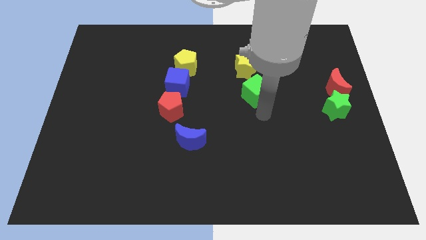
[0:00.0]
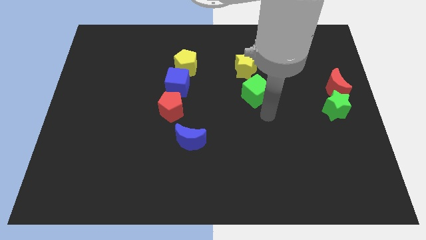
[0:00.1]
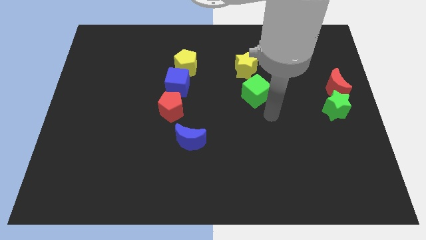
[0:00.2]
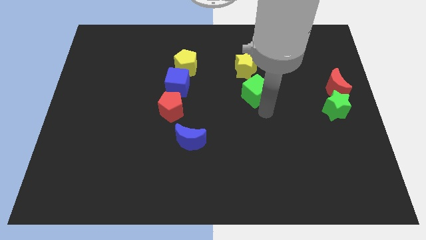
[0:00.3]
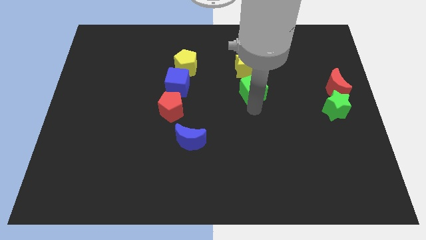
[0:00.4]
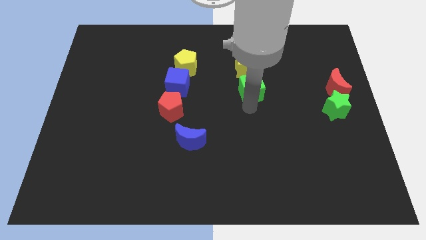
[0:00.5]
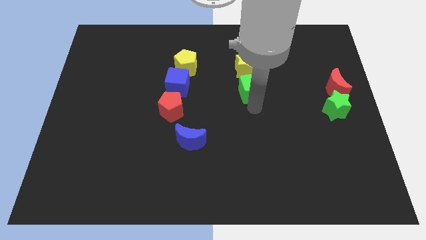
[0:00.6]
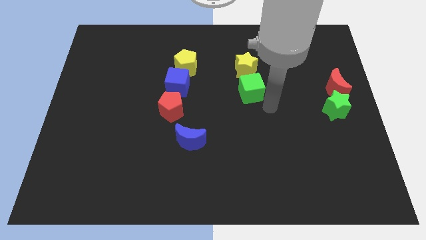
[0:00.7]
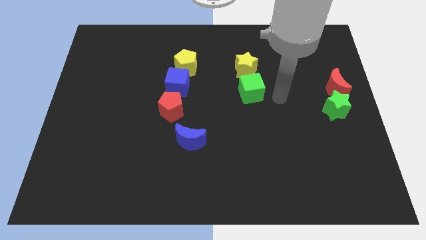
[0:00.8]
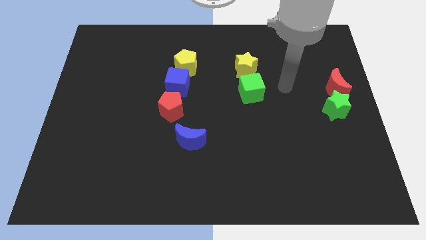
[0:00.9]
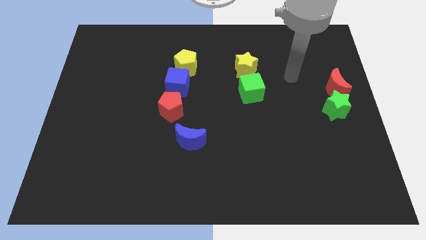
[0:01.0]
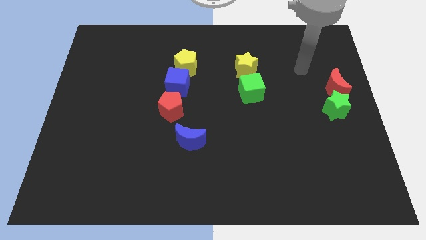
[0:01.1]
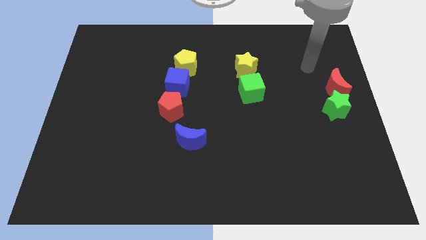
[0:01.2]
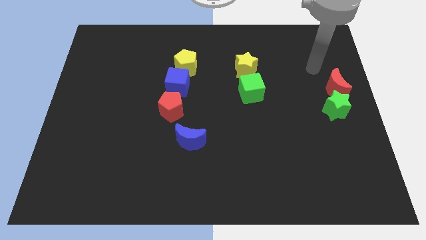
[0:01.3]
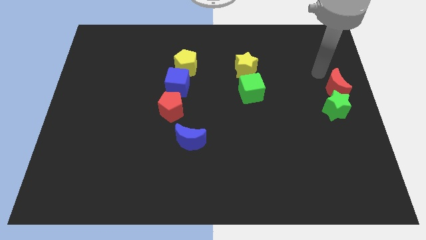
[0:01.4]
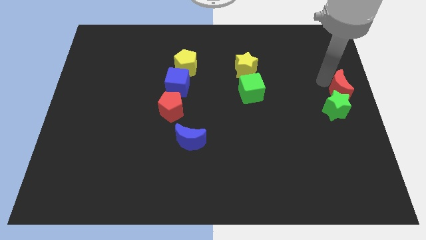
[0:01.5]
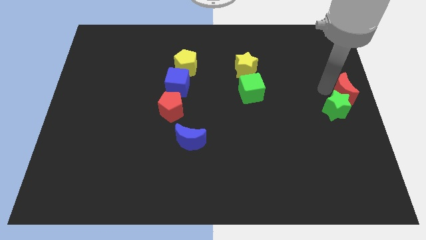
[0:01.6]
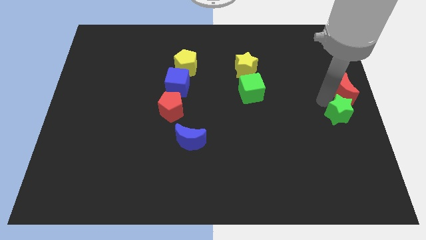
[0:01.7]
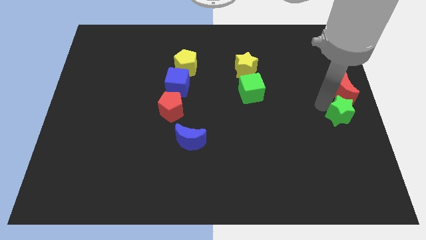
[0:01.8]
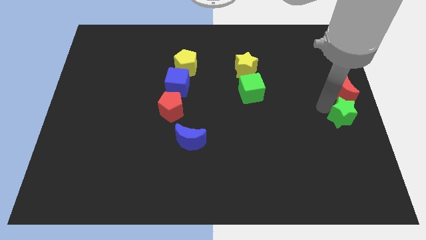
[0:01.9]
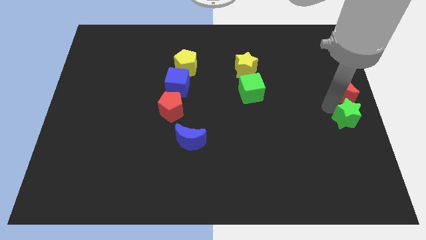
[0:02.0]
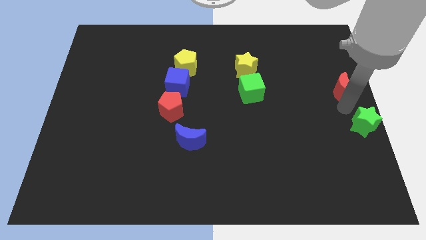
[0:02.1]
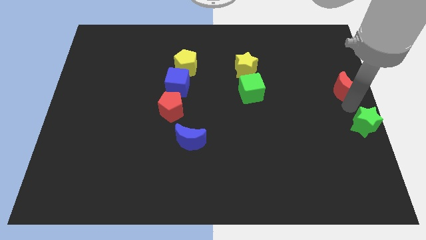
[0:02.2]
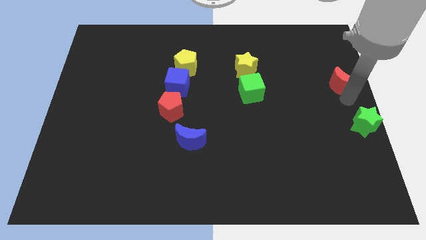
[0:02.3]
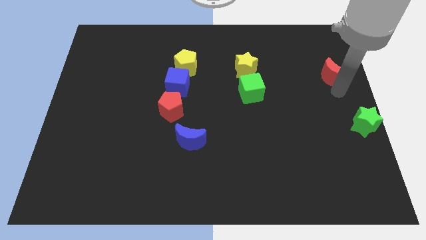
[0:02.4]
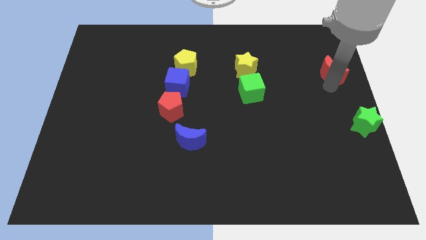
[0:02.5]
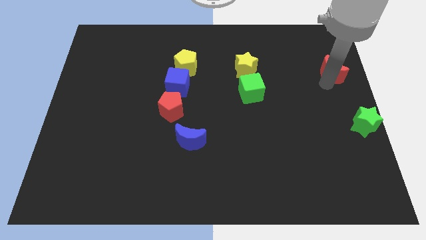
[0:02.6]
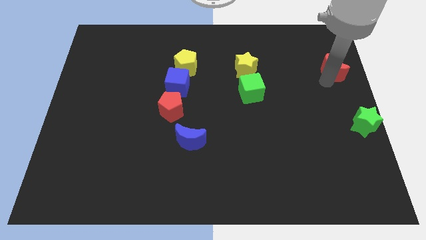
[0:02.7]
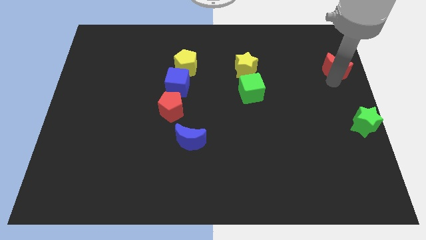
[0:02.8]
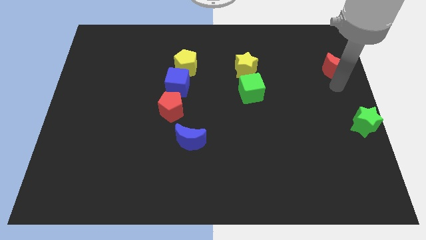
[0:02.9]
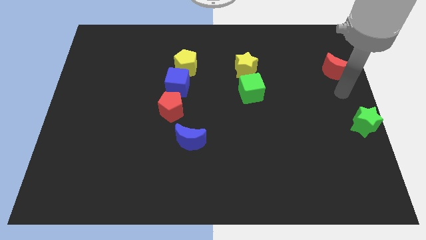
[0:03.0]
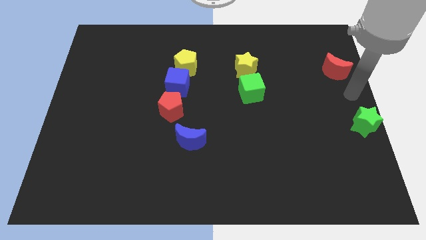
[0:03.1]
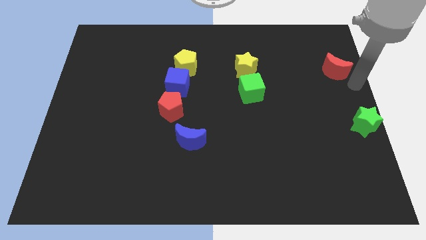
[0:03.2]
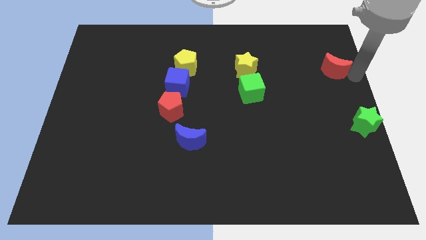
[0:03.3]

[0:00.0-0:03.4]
separate the red moon and green star

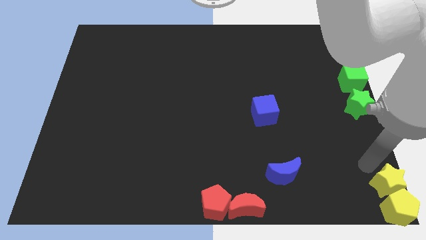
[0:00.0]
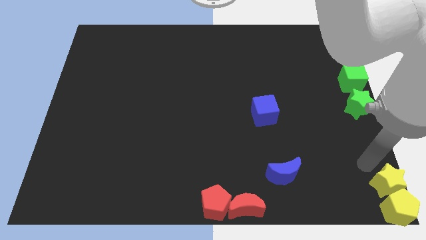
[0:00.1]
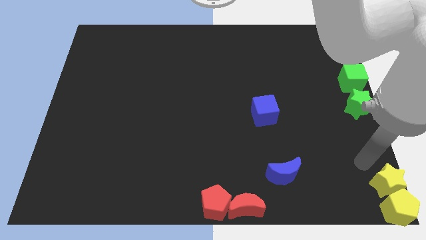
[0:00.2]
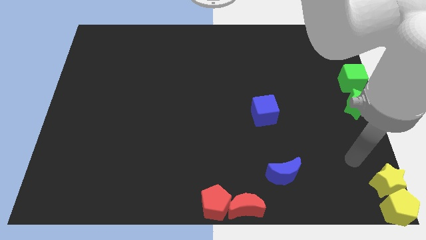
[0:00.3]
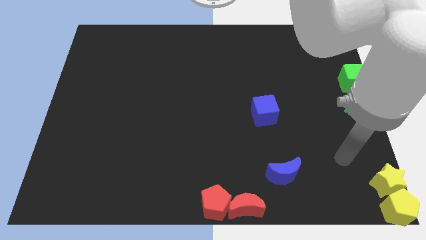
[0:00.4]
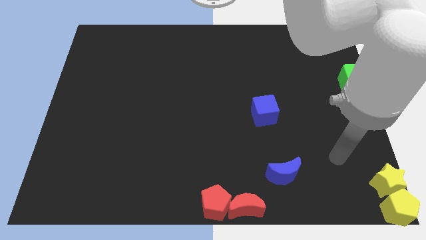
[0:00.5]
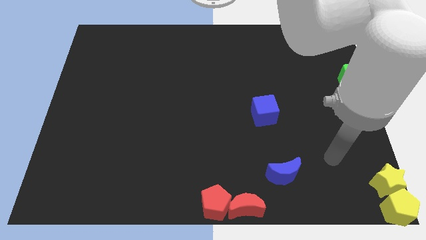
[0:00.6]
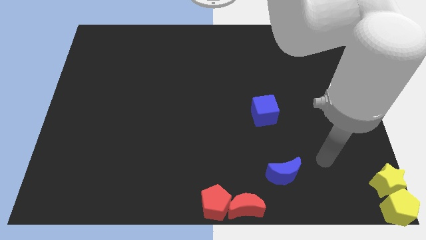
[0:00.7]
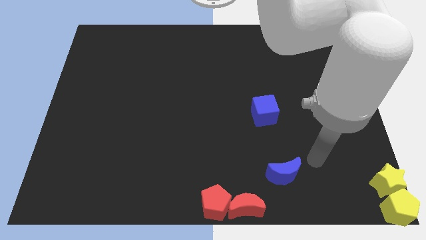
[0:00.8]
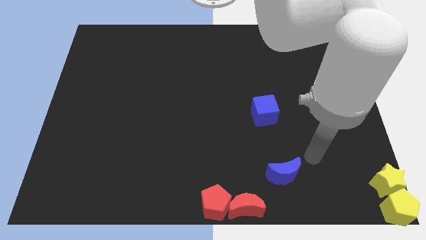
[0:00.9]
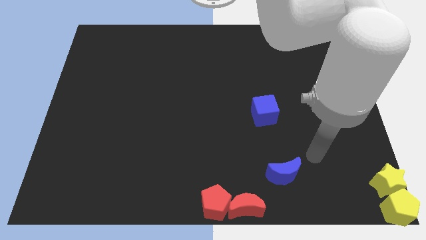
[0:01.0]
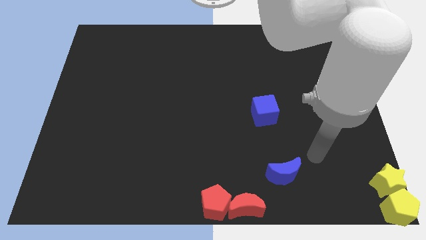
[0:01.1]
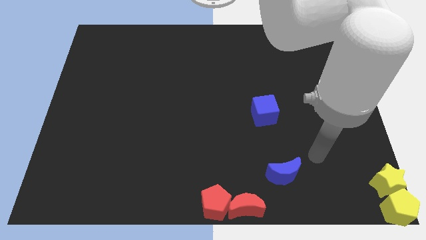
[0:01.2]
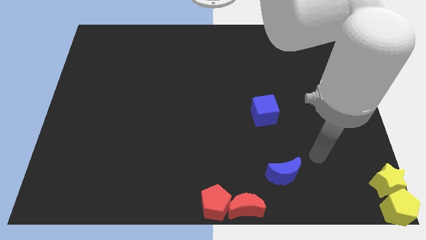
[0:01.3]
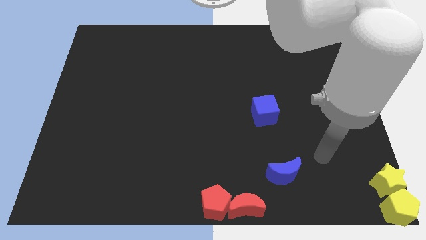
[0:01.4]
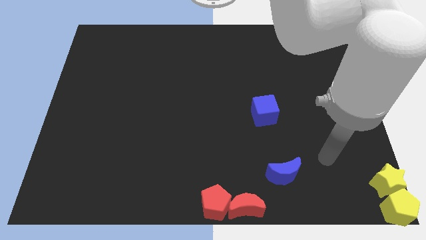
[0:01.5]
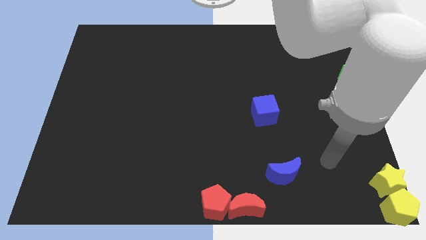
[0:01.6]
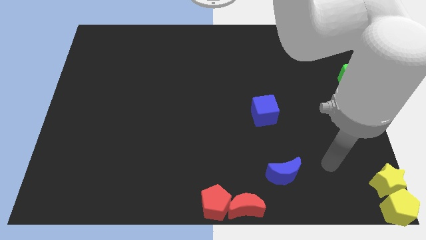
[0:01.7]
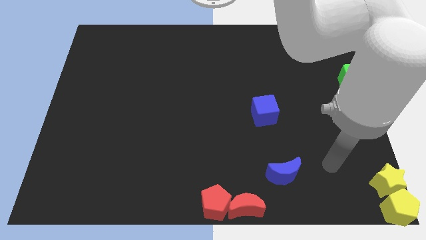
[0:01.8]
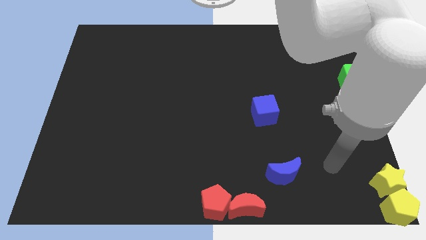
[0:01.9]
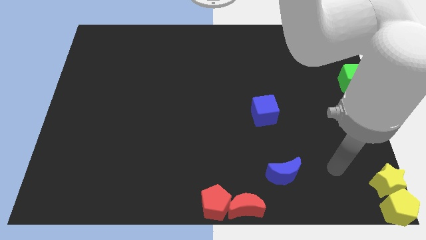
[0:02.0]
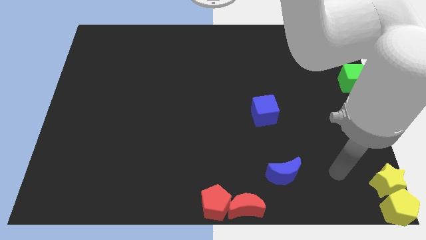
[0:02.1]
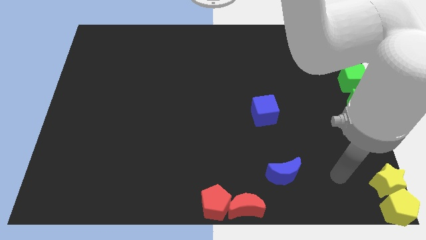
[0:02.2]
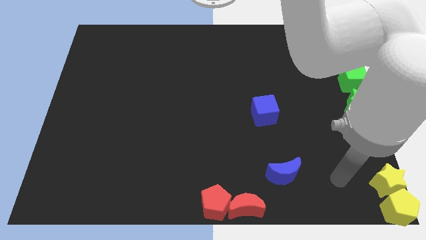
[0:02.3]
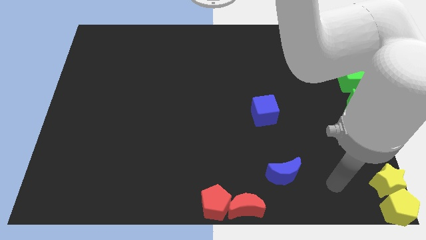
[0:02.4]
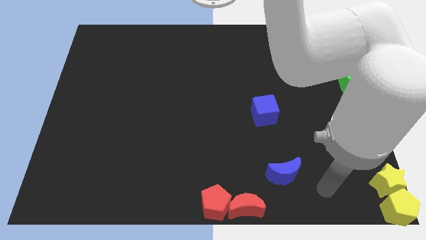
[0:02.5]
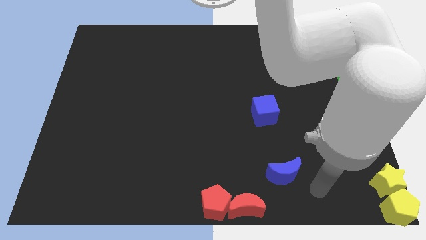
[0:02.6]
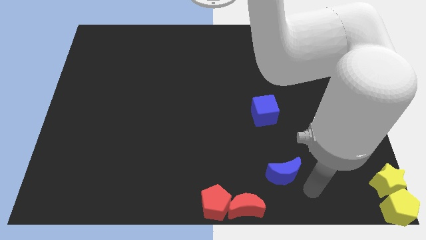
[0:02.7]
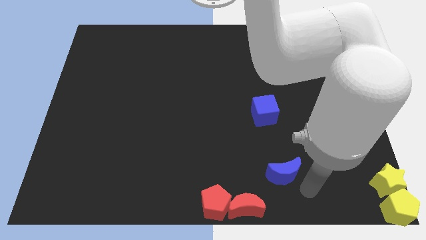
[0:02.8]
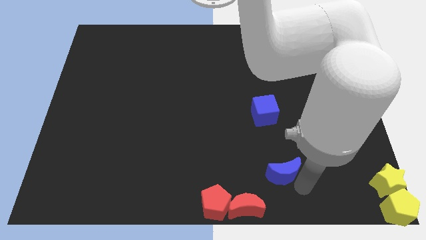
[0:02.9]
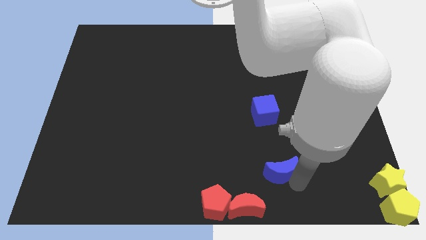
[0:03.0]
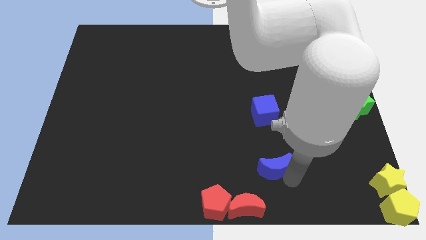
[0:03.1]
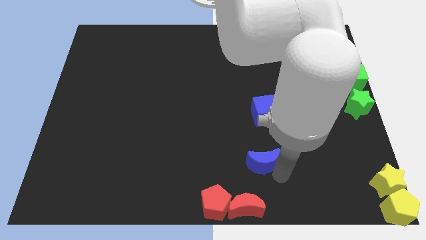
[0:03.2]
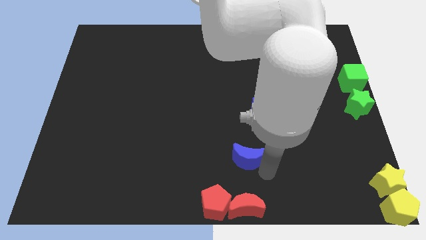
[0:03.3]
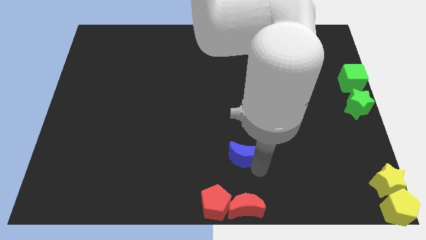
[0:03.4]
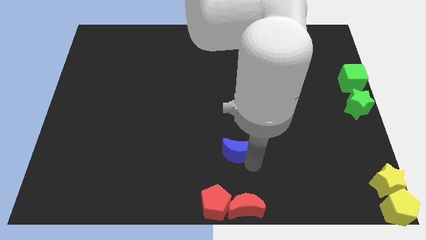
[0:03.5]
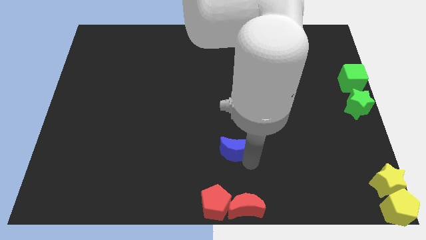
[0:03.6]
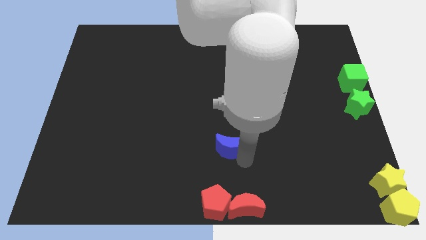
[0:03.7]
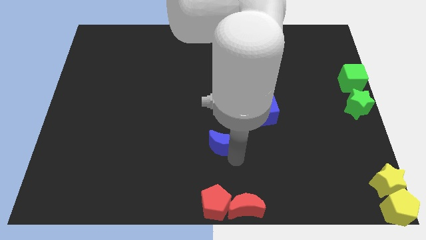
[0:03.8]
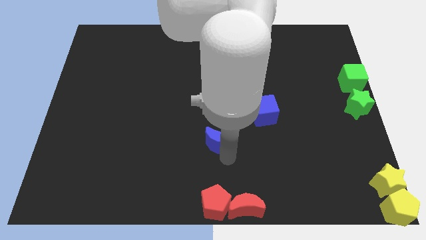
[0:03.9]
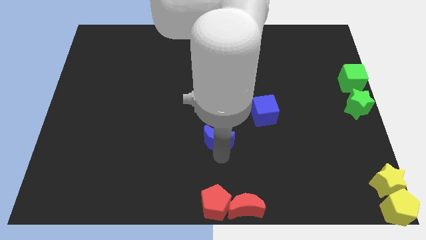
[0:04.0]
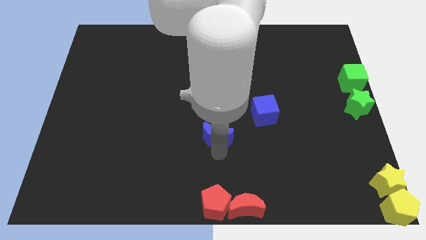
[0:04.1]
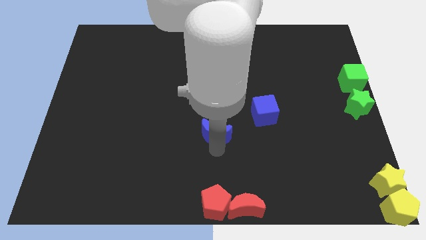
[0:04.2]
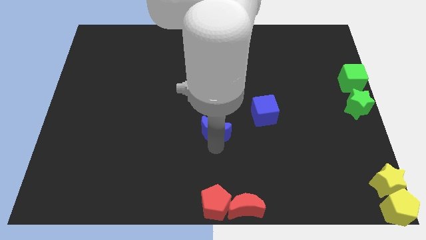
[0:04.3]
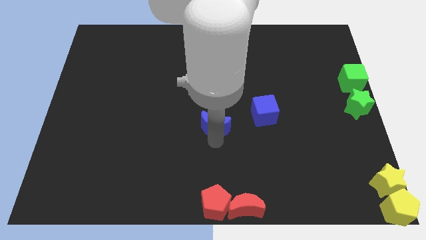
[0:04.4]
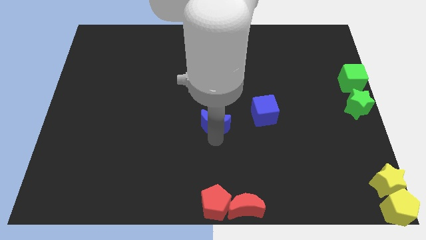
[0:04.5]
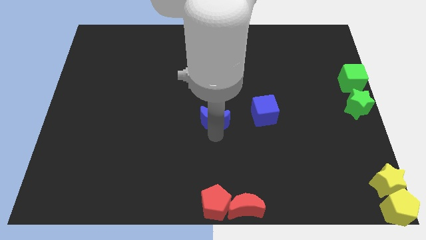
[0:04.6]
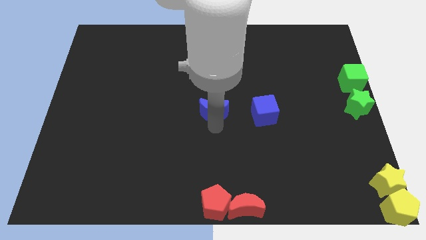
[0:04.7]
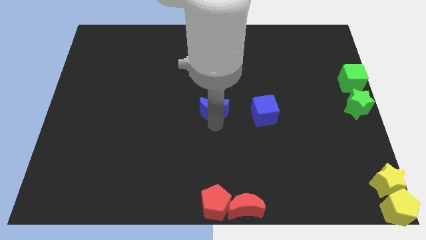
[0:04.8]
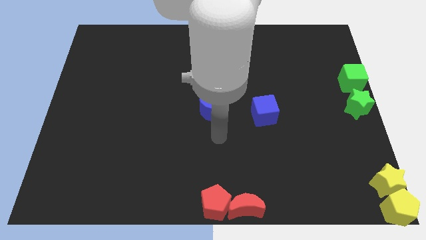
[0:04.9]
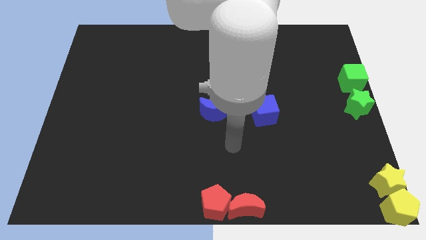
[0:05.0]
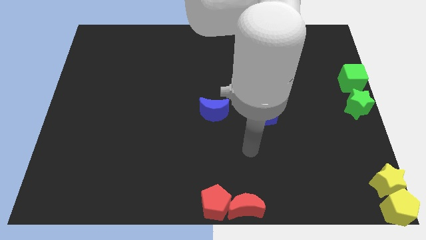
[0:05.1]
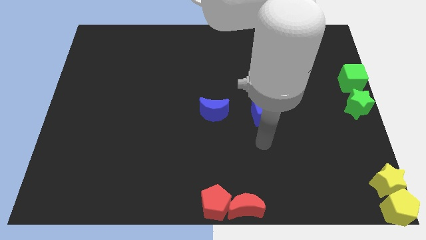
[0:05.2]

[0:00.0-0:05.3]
place the blue moon left to the blue cube

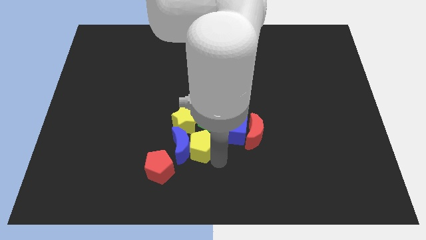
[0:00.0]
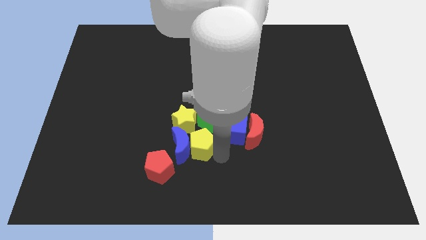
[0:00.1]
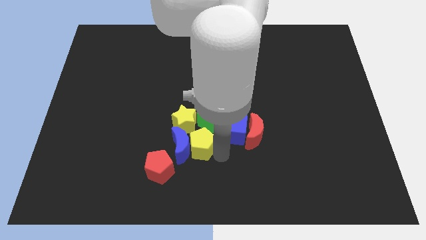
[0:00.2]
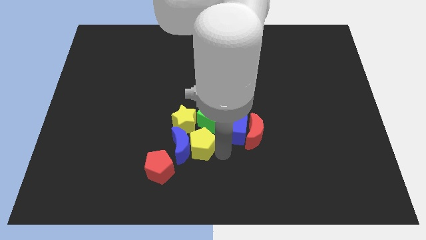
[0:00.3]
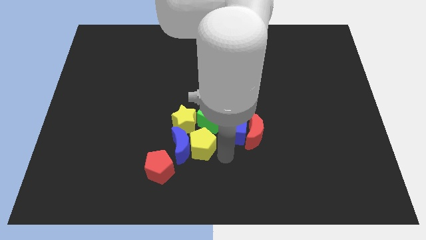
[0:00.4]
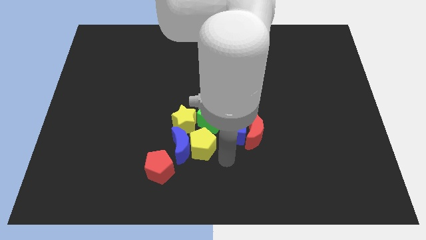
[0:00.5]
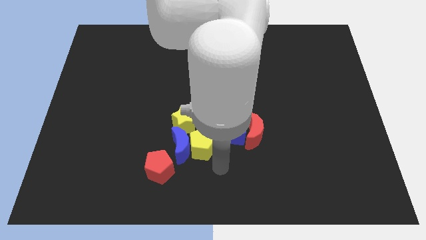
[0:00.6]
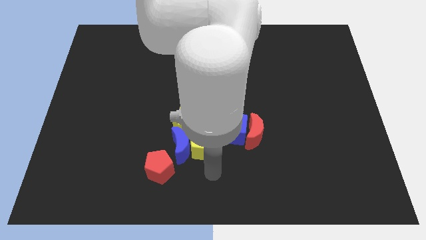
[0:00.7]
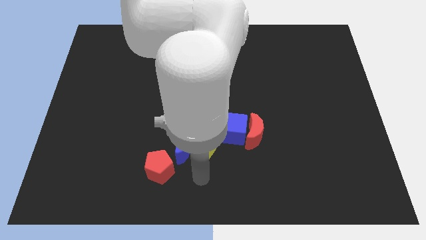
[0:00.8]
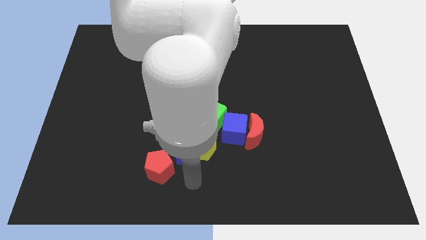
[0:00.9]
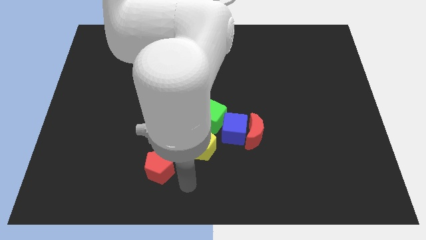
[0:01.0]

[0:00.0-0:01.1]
move your arm away from the yellow pentagon
